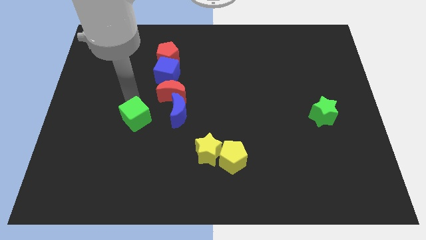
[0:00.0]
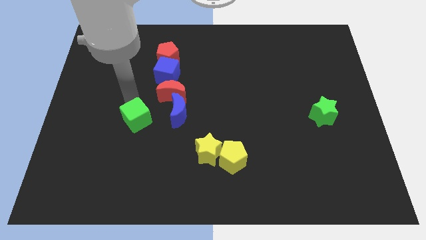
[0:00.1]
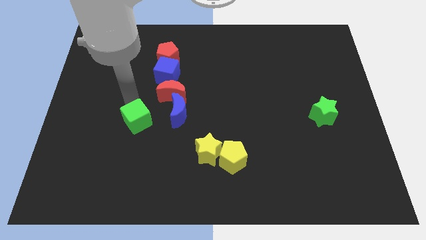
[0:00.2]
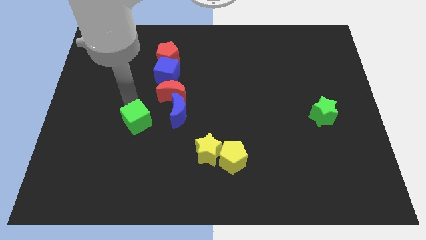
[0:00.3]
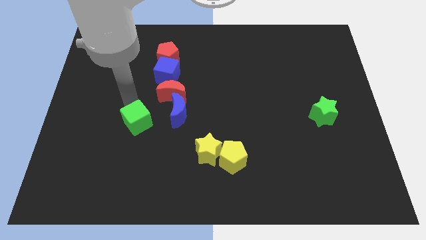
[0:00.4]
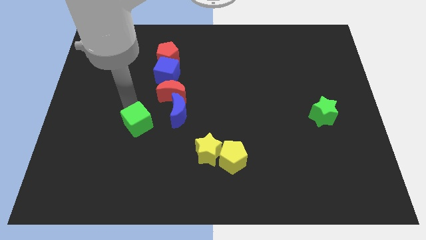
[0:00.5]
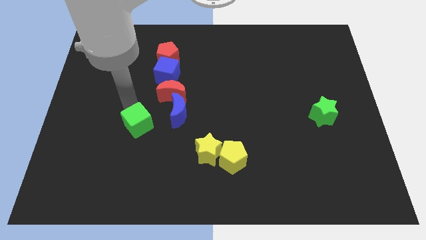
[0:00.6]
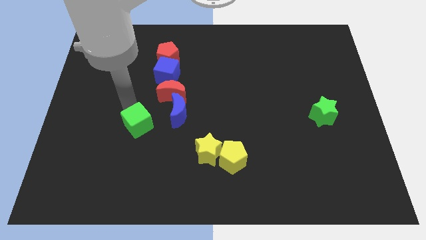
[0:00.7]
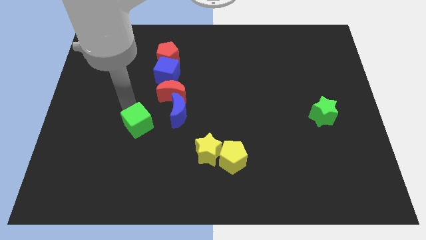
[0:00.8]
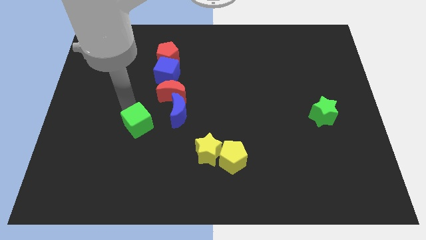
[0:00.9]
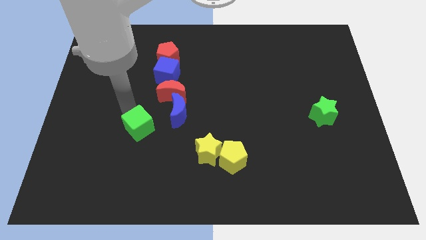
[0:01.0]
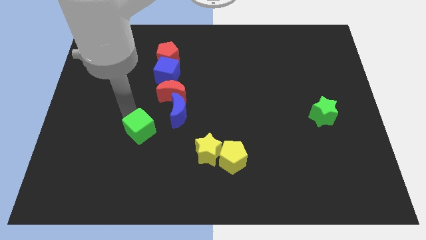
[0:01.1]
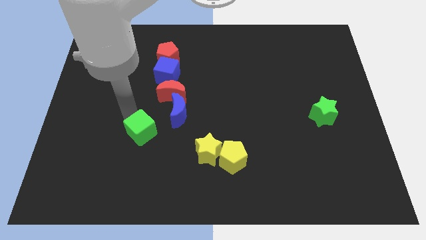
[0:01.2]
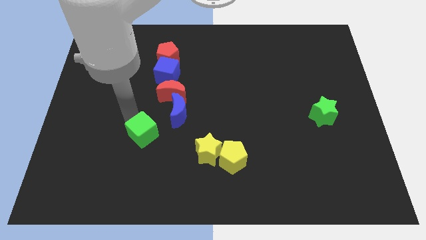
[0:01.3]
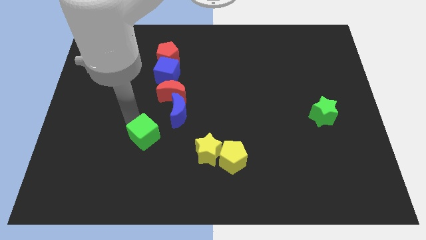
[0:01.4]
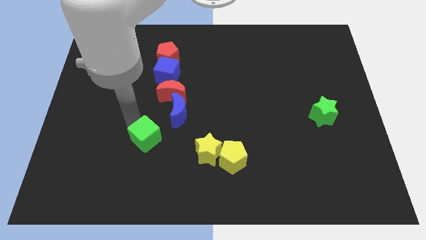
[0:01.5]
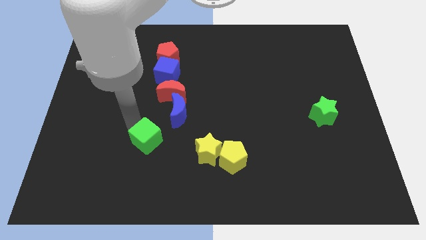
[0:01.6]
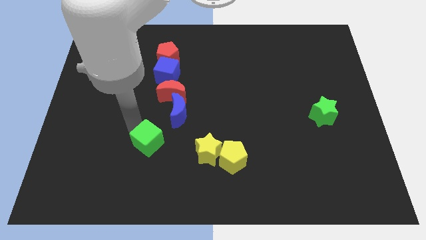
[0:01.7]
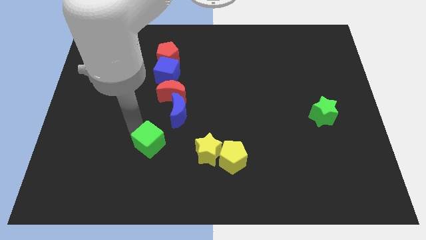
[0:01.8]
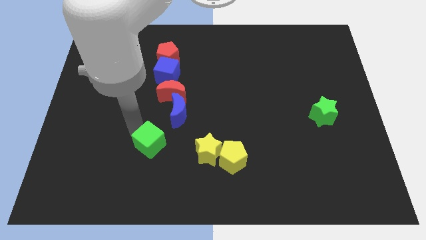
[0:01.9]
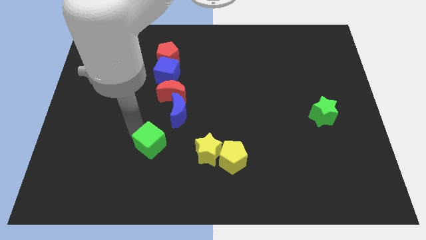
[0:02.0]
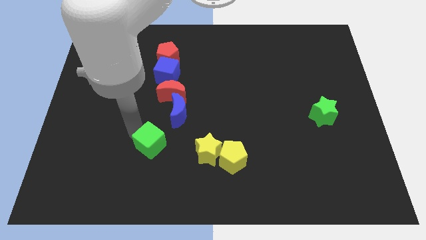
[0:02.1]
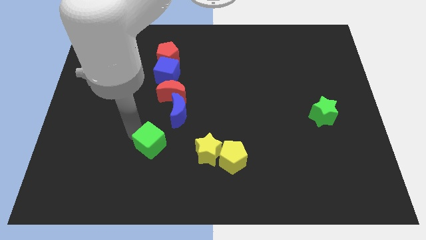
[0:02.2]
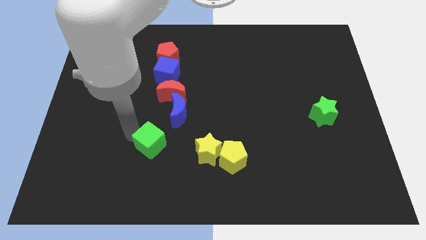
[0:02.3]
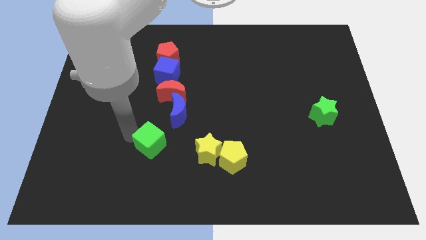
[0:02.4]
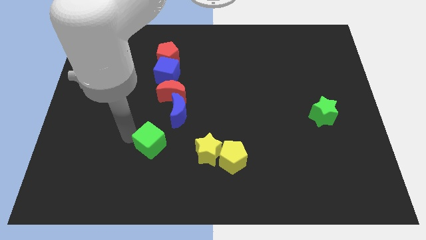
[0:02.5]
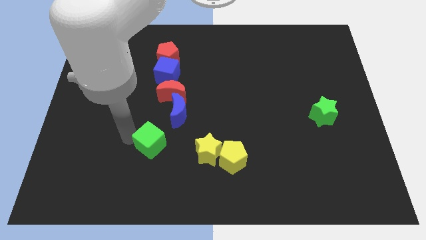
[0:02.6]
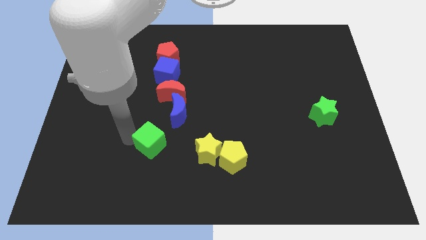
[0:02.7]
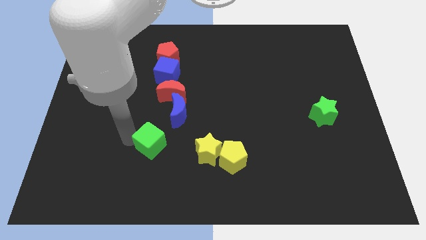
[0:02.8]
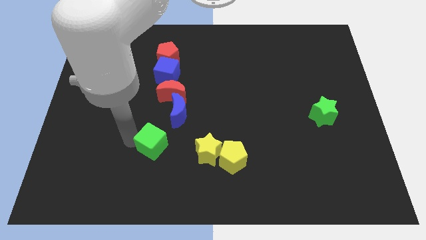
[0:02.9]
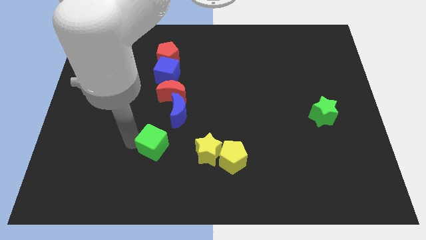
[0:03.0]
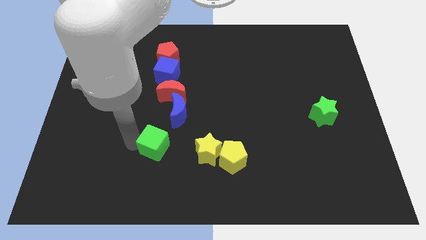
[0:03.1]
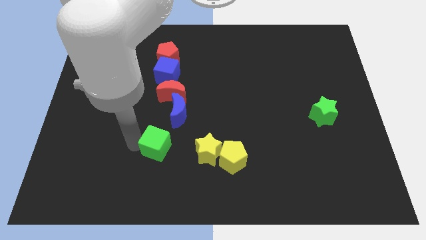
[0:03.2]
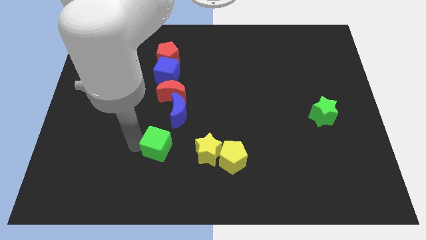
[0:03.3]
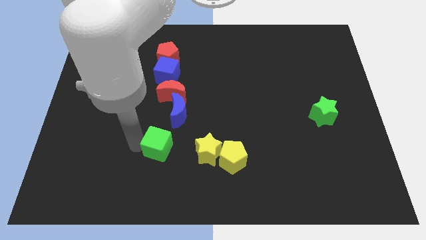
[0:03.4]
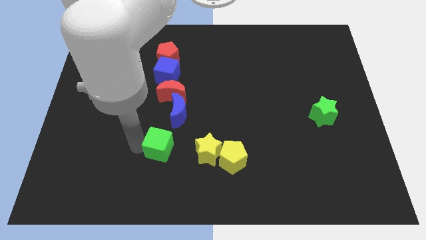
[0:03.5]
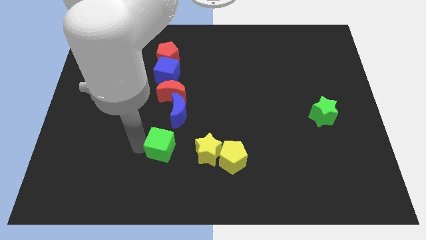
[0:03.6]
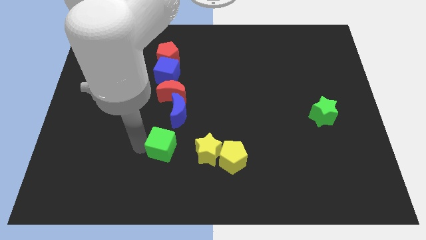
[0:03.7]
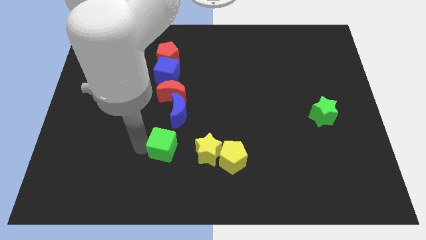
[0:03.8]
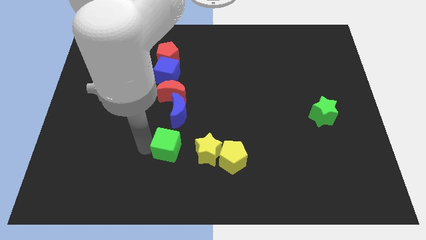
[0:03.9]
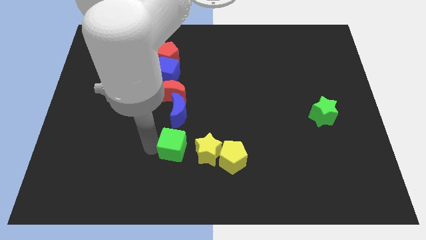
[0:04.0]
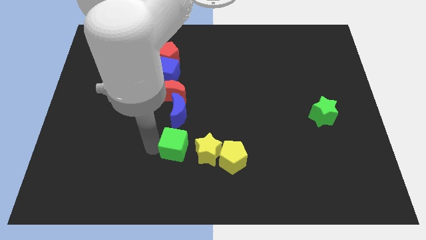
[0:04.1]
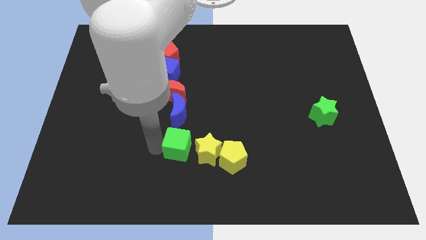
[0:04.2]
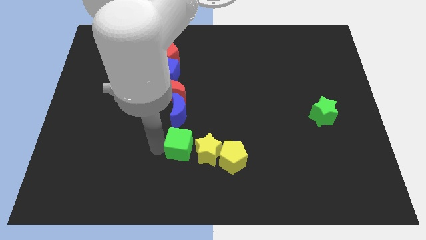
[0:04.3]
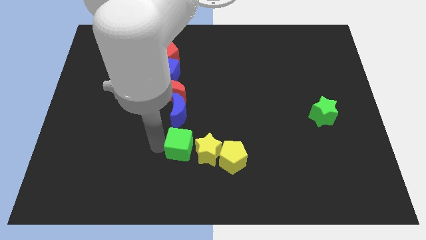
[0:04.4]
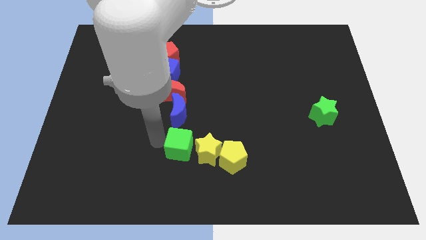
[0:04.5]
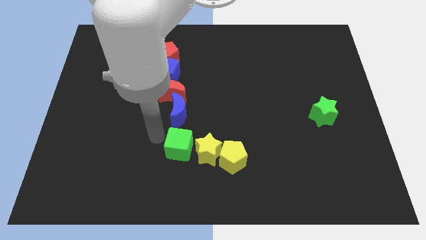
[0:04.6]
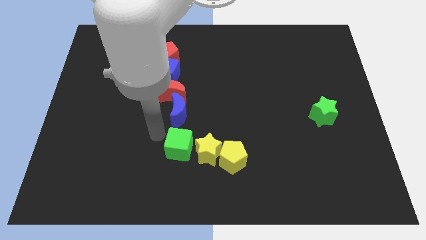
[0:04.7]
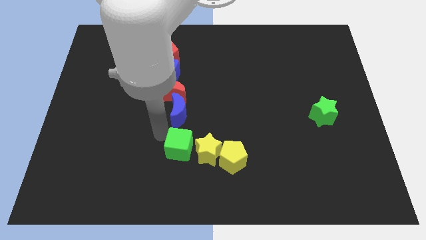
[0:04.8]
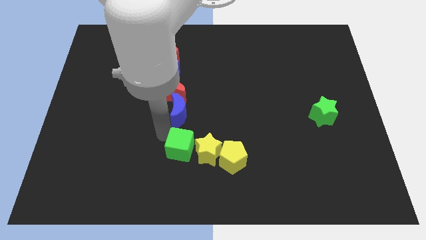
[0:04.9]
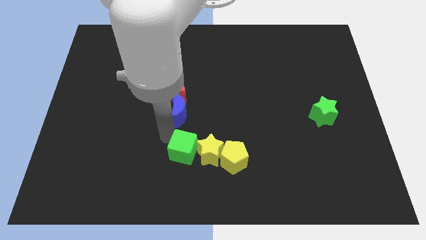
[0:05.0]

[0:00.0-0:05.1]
drag the green cube into the left side of the yellow star

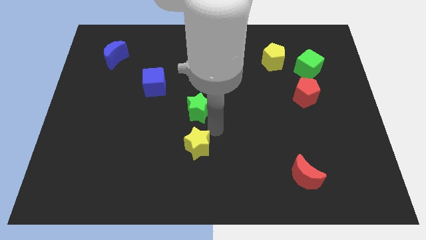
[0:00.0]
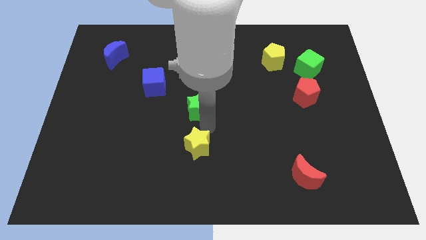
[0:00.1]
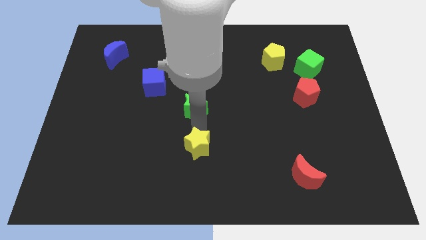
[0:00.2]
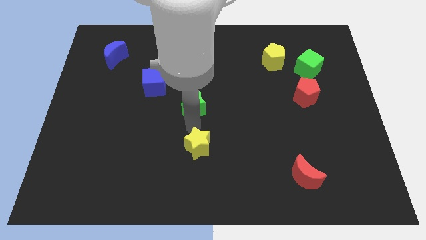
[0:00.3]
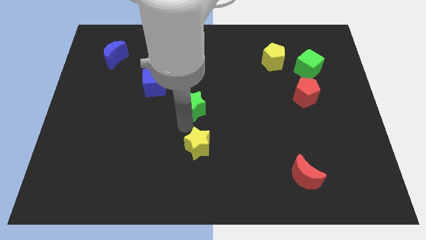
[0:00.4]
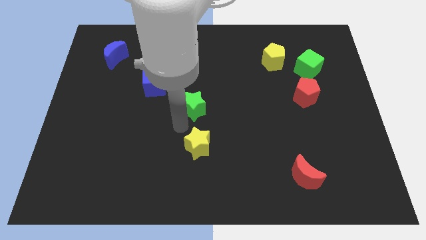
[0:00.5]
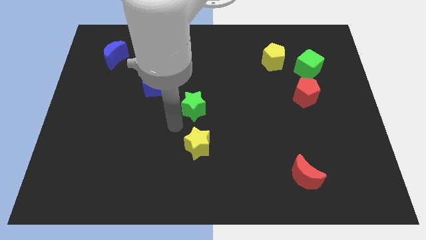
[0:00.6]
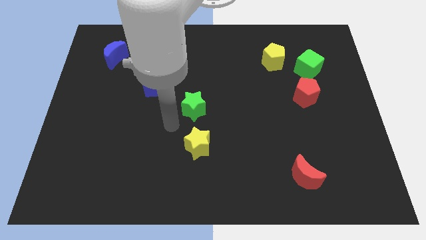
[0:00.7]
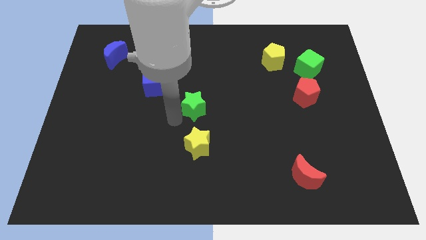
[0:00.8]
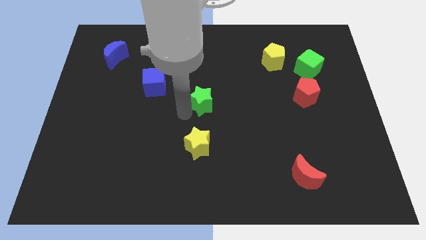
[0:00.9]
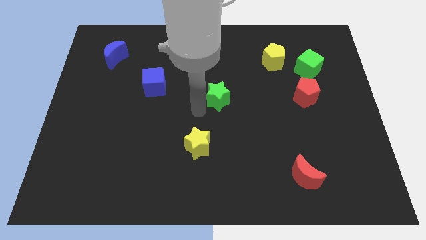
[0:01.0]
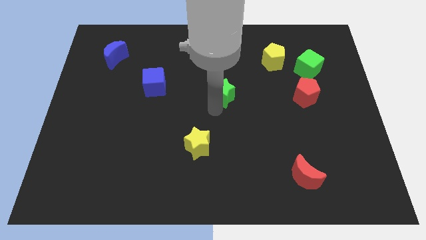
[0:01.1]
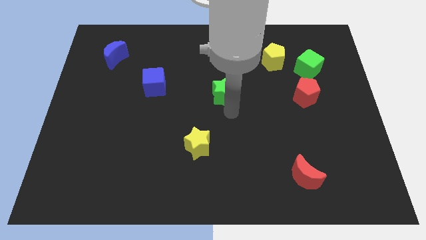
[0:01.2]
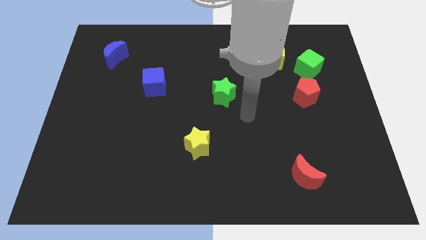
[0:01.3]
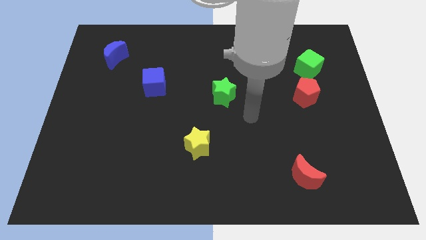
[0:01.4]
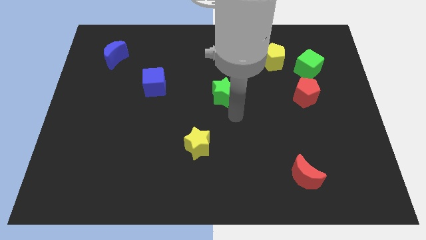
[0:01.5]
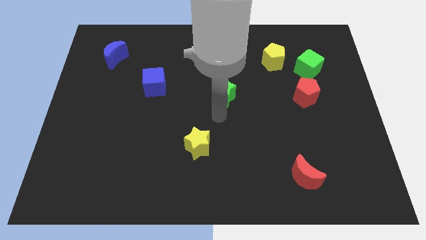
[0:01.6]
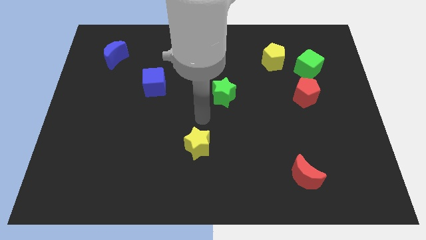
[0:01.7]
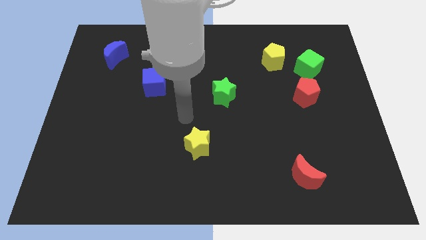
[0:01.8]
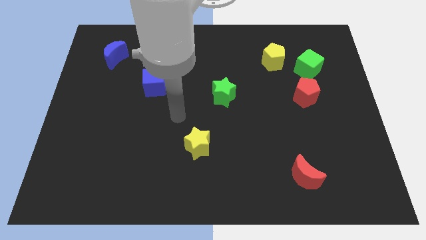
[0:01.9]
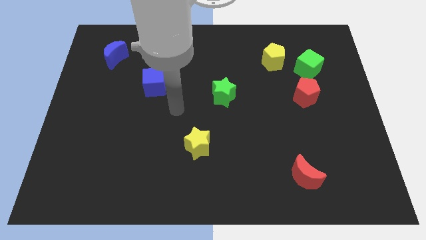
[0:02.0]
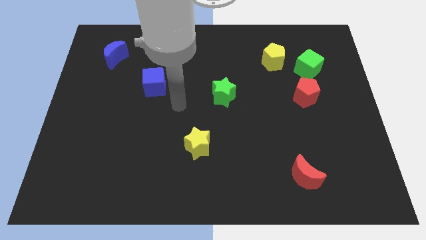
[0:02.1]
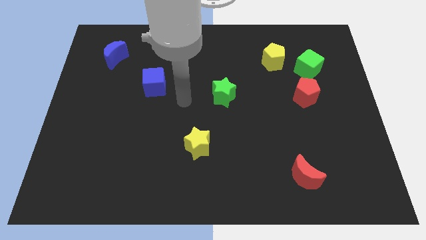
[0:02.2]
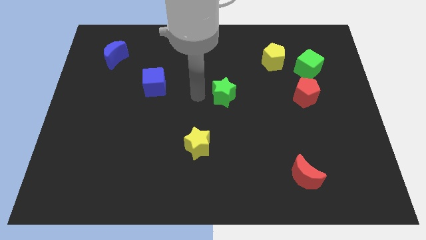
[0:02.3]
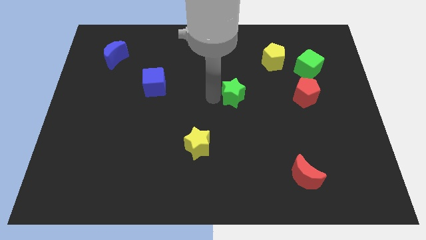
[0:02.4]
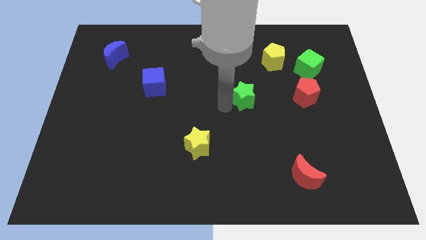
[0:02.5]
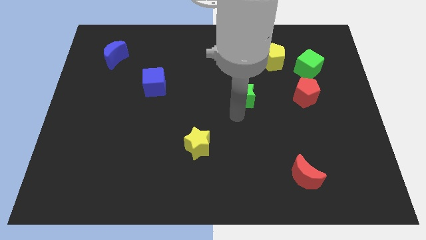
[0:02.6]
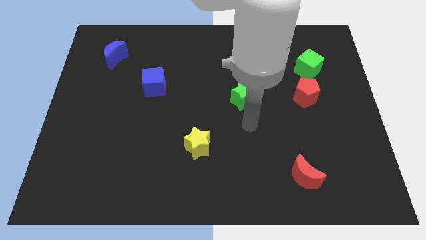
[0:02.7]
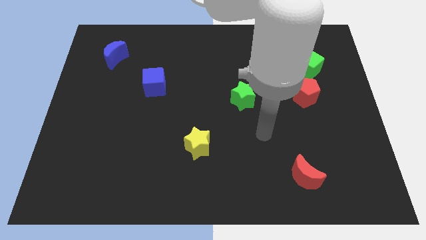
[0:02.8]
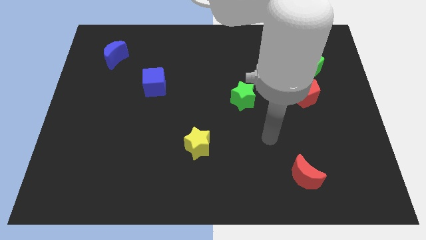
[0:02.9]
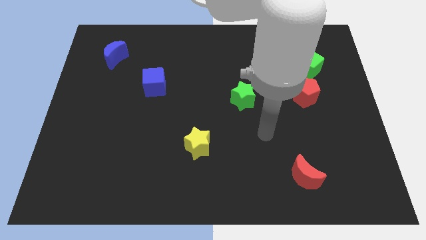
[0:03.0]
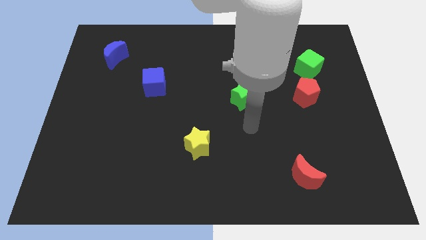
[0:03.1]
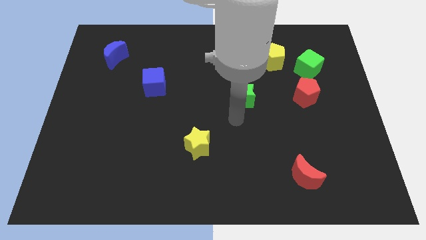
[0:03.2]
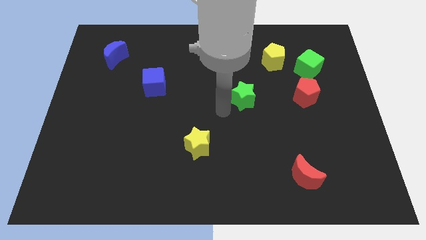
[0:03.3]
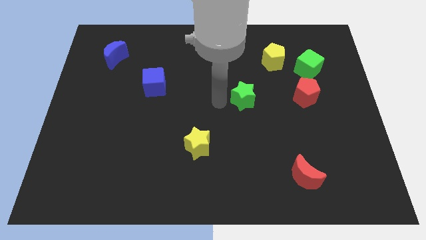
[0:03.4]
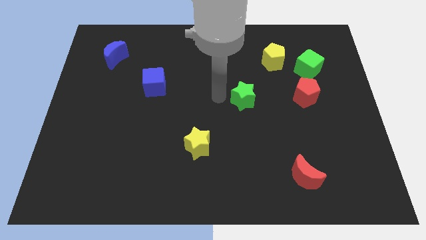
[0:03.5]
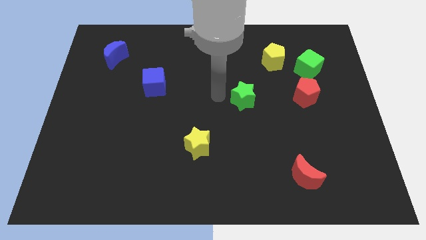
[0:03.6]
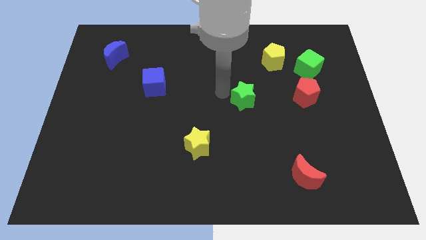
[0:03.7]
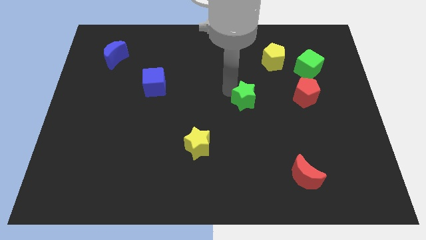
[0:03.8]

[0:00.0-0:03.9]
move green star parallel to the red pentagon
